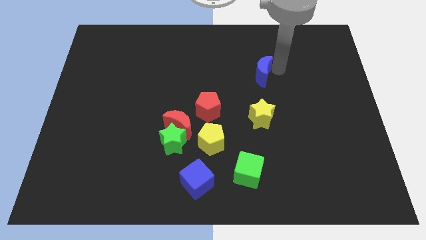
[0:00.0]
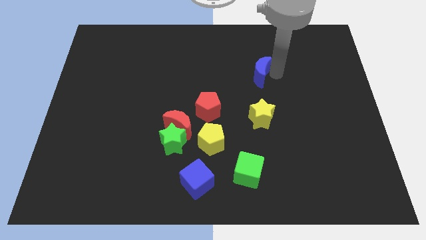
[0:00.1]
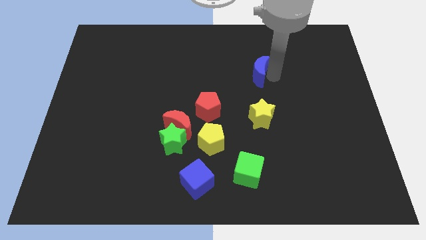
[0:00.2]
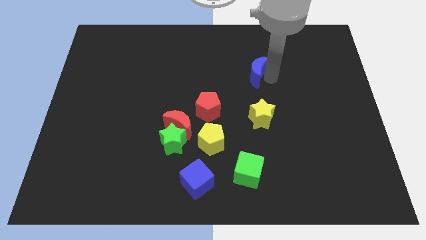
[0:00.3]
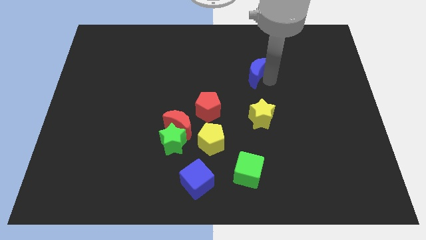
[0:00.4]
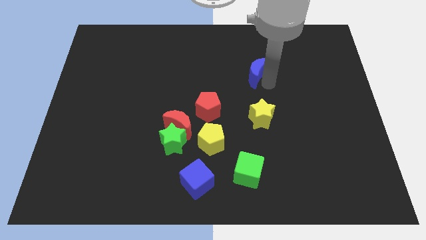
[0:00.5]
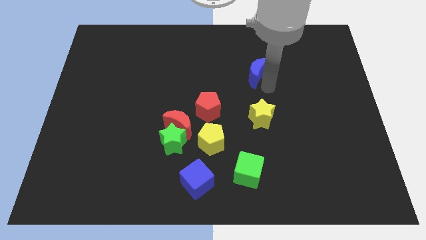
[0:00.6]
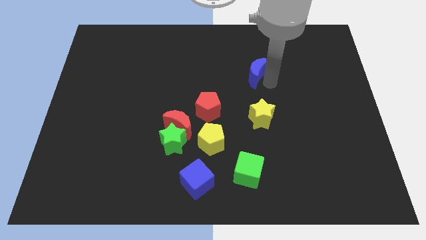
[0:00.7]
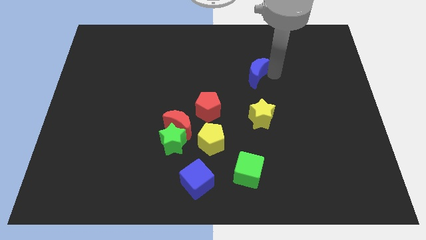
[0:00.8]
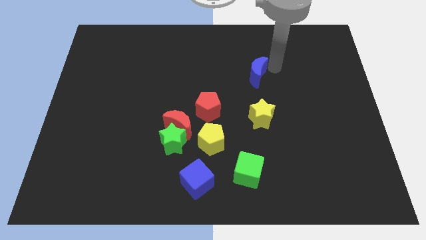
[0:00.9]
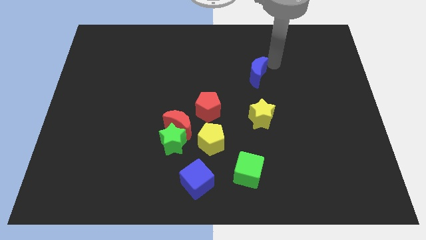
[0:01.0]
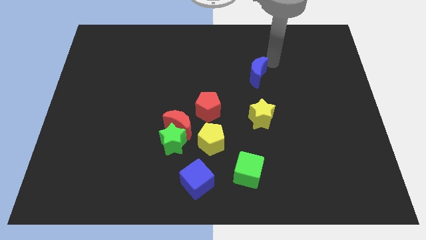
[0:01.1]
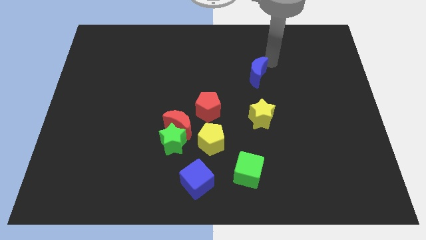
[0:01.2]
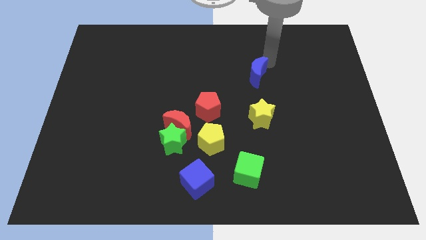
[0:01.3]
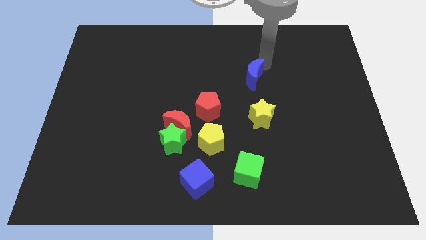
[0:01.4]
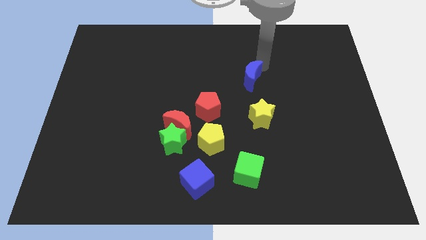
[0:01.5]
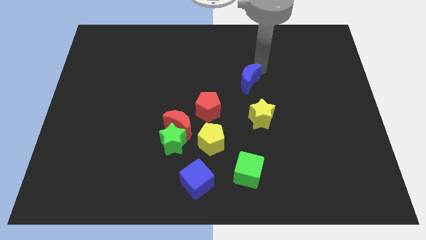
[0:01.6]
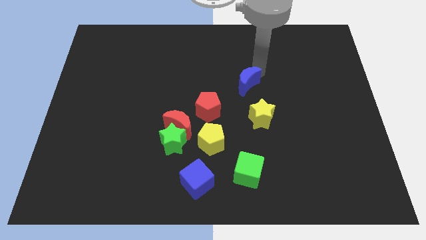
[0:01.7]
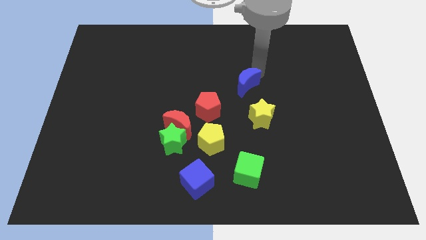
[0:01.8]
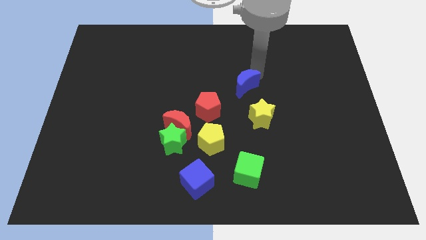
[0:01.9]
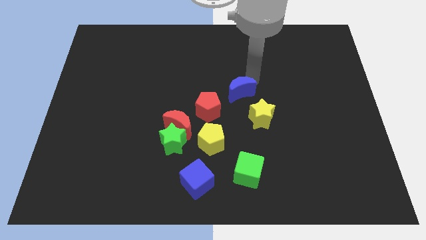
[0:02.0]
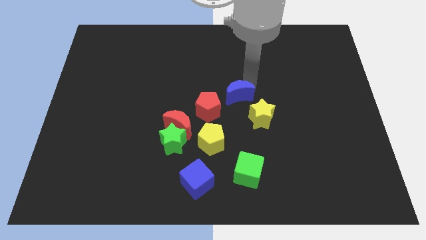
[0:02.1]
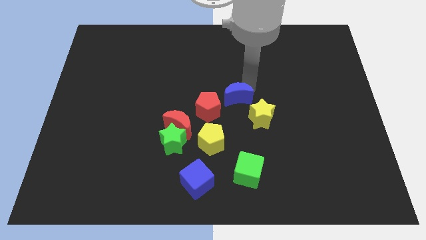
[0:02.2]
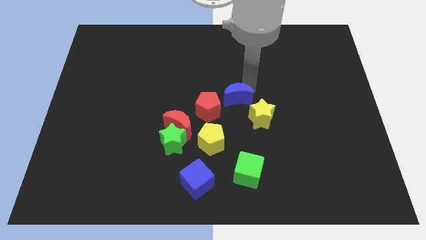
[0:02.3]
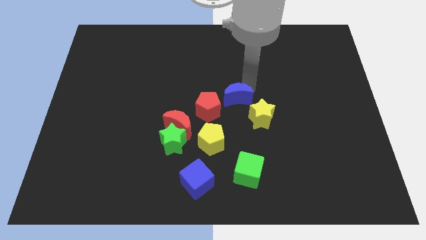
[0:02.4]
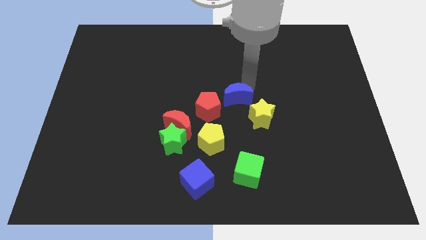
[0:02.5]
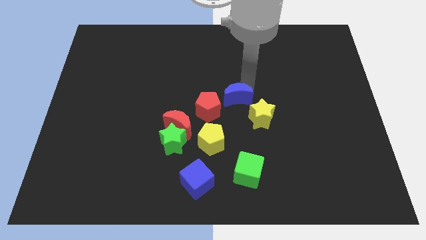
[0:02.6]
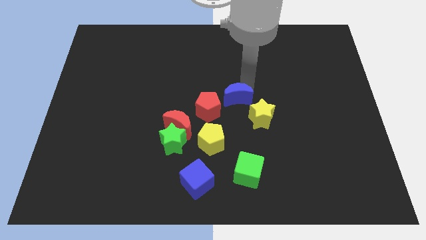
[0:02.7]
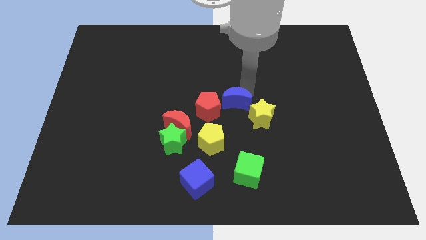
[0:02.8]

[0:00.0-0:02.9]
place blue crescent to the left of yellow star

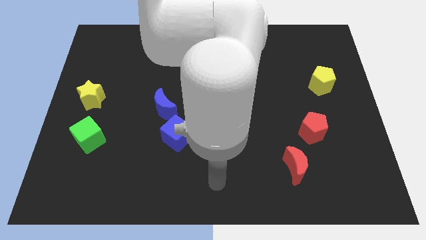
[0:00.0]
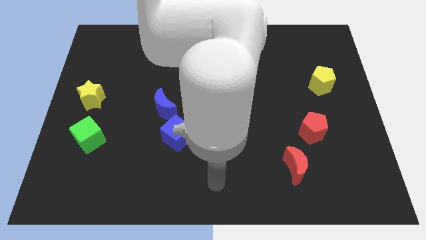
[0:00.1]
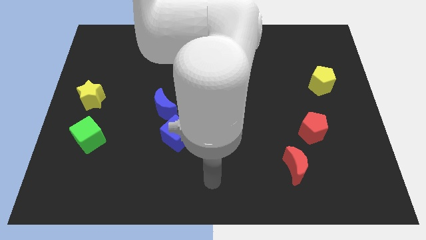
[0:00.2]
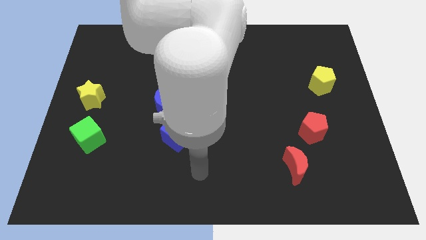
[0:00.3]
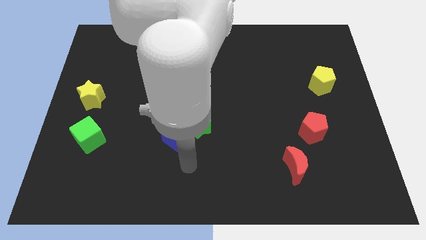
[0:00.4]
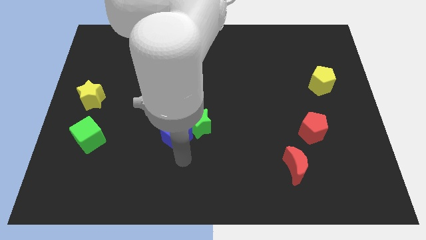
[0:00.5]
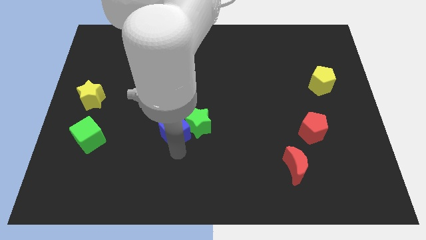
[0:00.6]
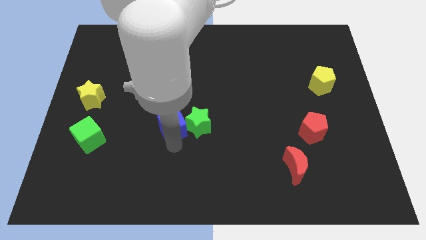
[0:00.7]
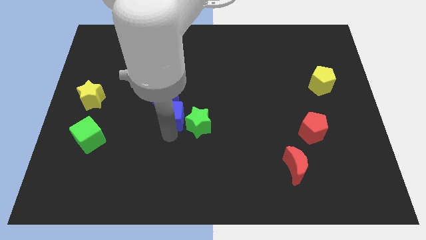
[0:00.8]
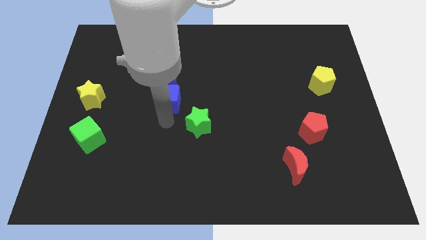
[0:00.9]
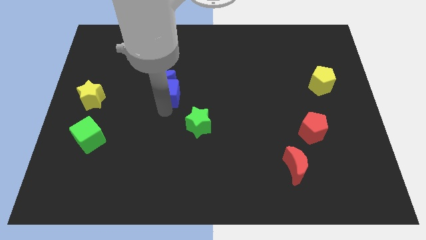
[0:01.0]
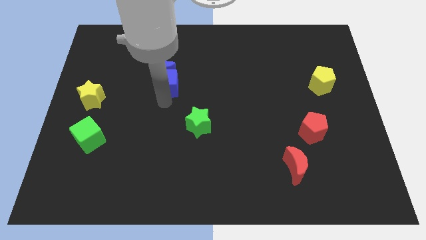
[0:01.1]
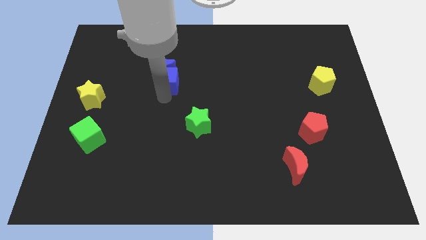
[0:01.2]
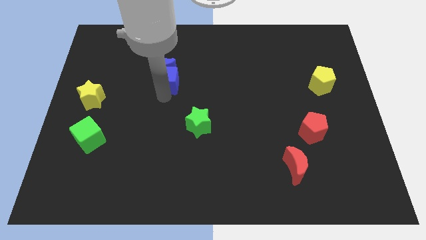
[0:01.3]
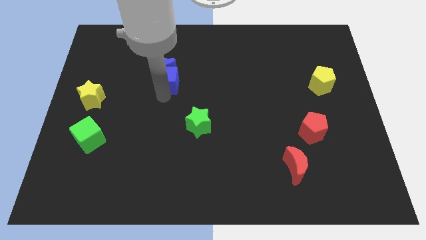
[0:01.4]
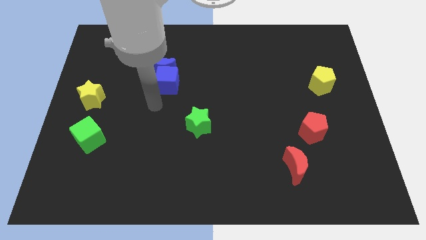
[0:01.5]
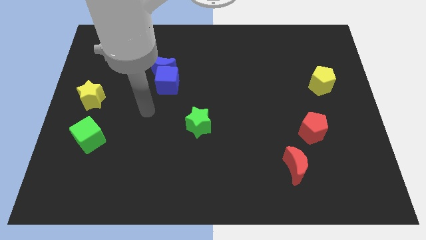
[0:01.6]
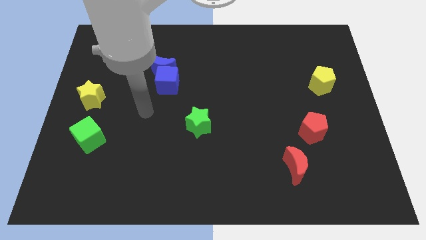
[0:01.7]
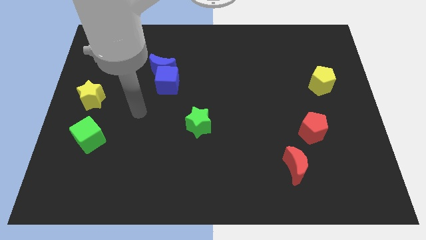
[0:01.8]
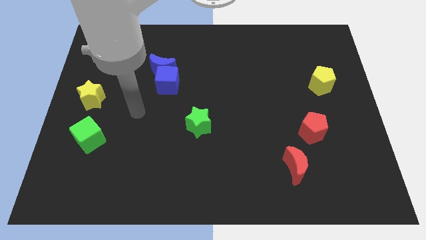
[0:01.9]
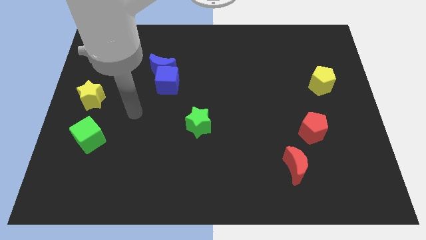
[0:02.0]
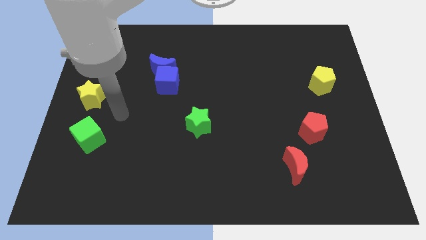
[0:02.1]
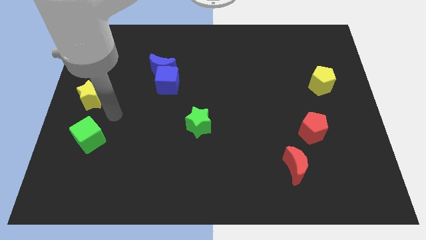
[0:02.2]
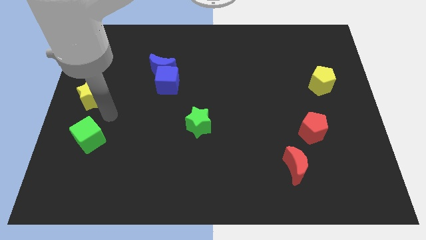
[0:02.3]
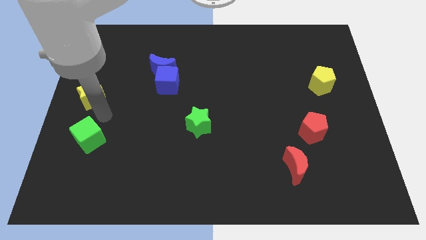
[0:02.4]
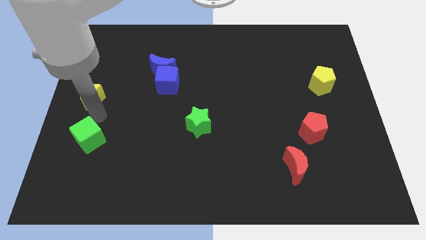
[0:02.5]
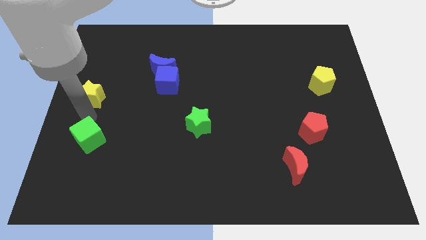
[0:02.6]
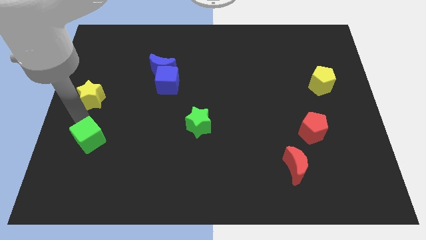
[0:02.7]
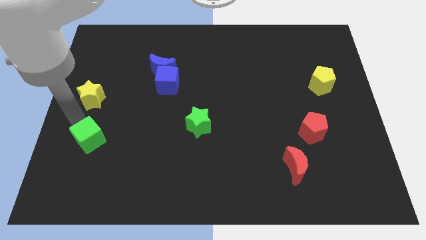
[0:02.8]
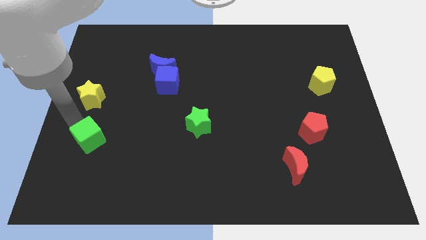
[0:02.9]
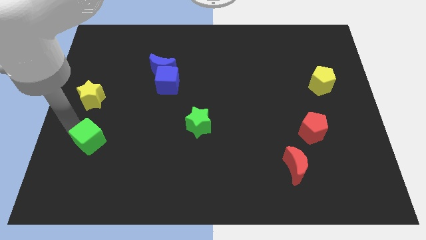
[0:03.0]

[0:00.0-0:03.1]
separate blue blocks from the green star

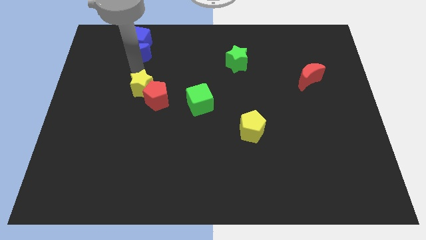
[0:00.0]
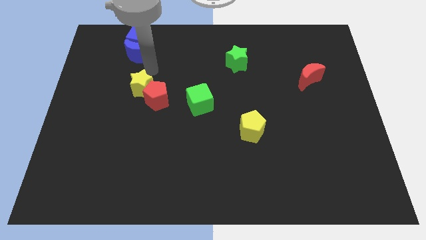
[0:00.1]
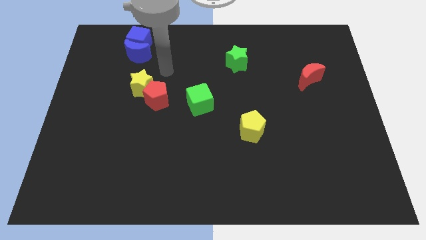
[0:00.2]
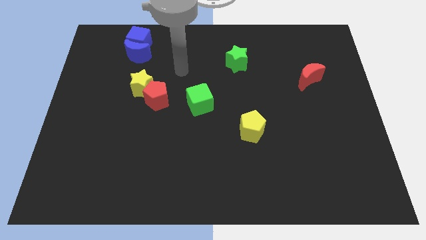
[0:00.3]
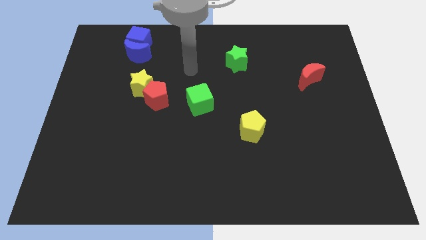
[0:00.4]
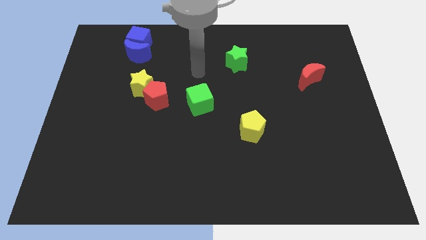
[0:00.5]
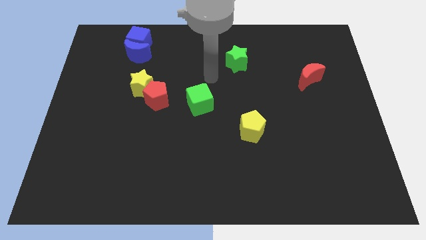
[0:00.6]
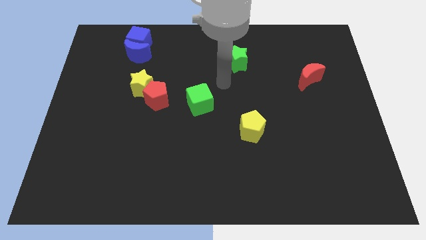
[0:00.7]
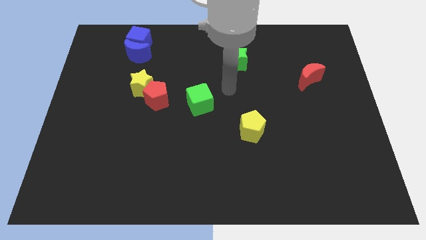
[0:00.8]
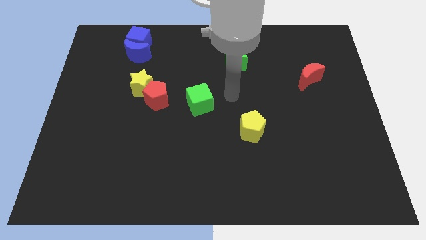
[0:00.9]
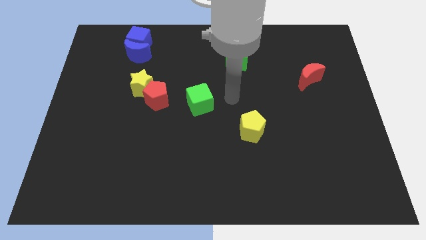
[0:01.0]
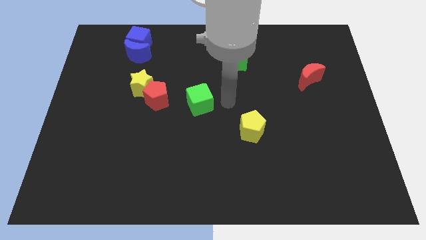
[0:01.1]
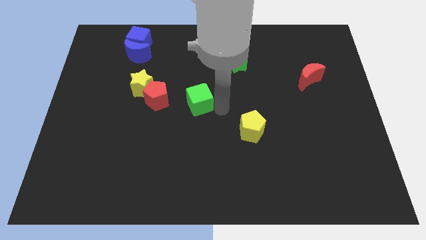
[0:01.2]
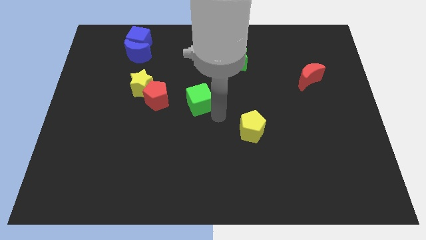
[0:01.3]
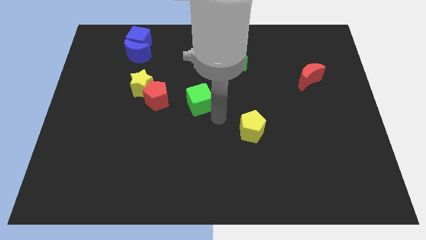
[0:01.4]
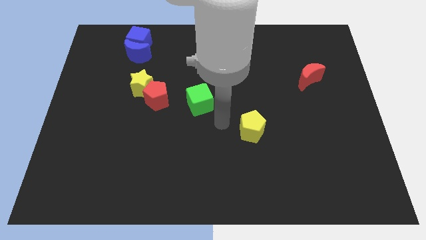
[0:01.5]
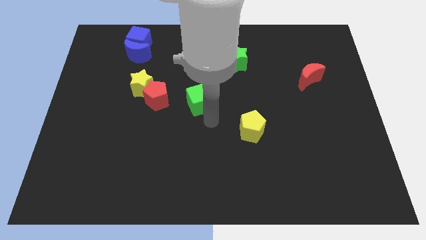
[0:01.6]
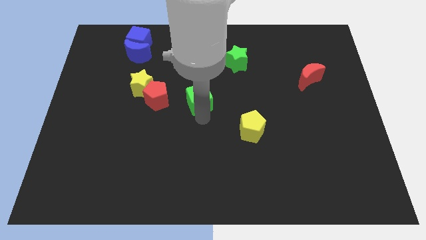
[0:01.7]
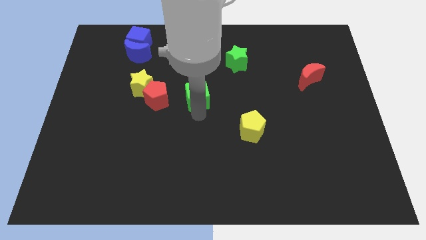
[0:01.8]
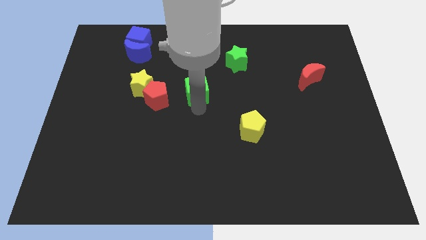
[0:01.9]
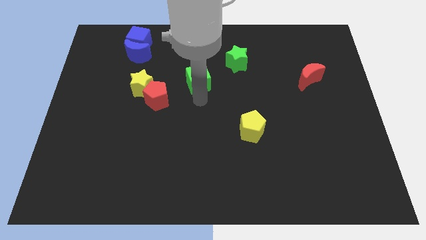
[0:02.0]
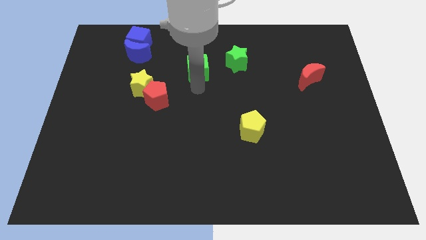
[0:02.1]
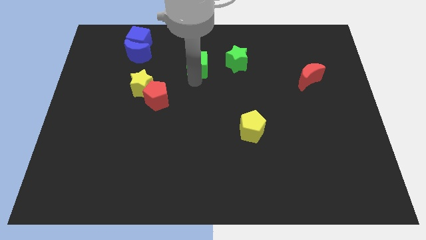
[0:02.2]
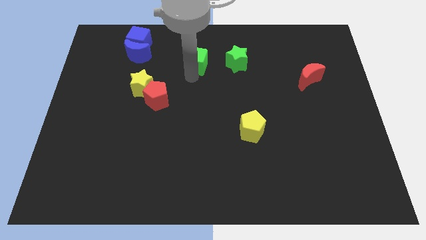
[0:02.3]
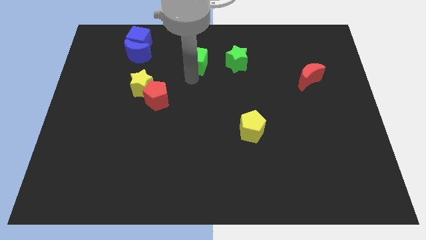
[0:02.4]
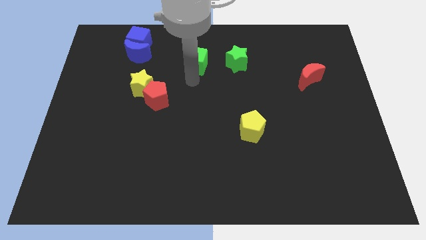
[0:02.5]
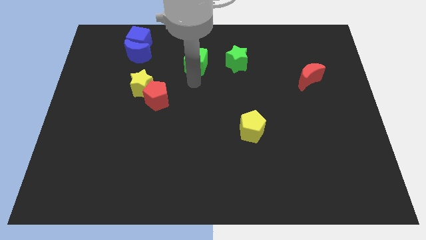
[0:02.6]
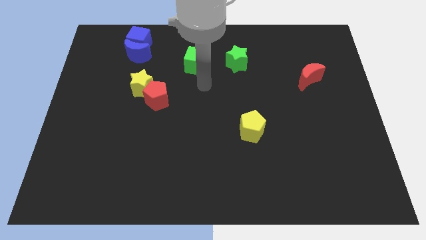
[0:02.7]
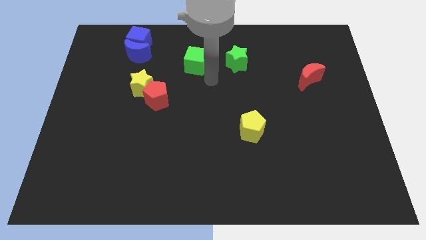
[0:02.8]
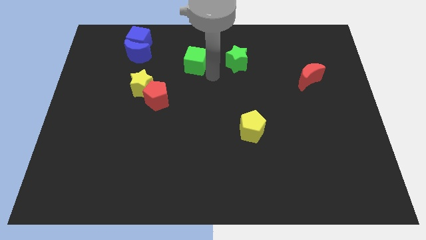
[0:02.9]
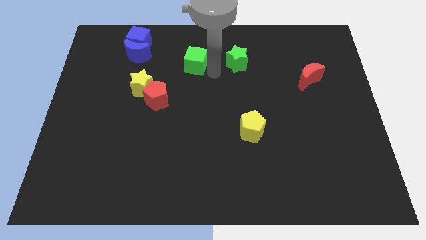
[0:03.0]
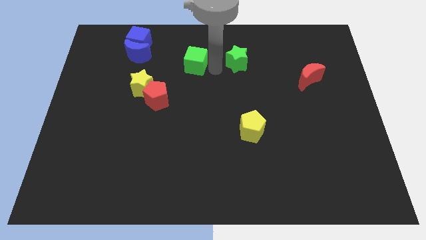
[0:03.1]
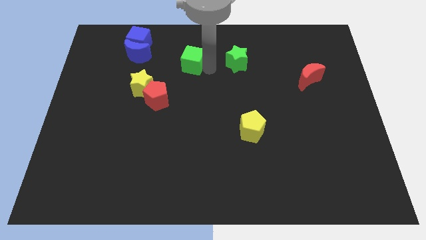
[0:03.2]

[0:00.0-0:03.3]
place the green cube at left side of the green star
